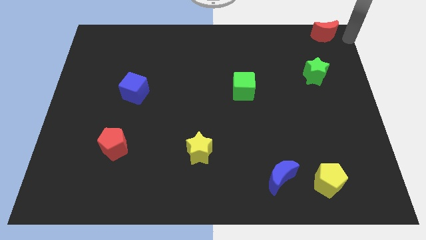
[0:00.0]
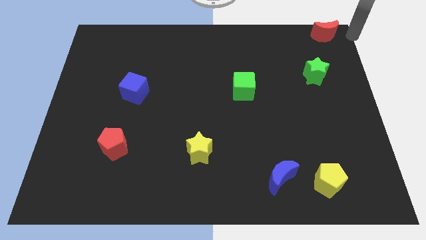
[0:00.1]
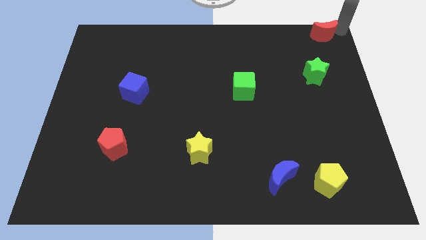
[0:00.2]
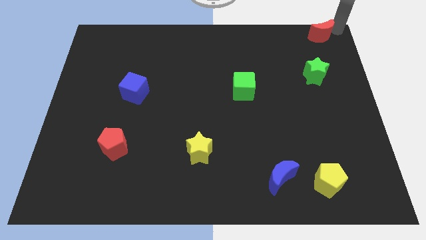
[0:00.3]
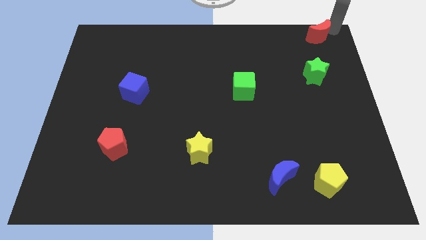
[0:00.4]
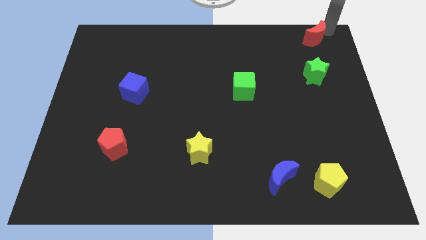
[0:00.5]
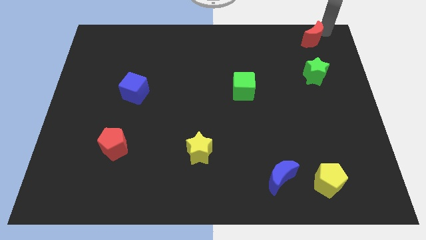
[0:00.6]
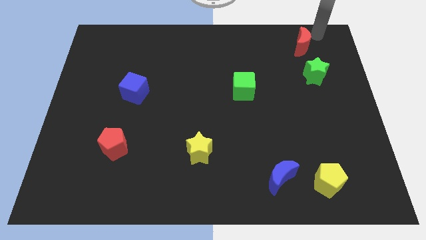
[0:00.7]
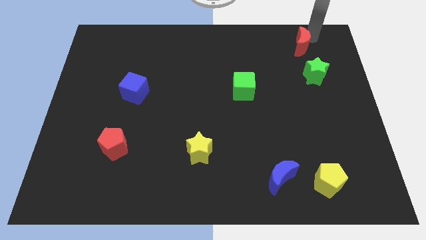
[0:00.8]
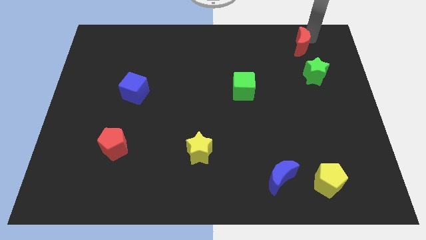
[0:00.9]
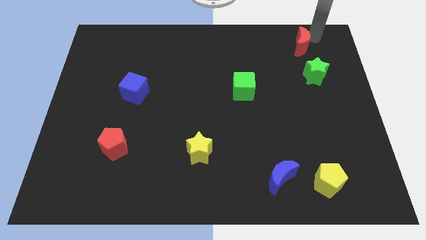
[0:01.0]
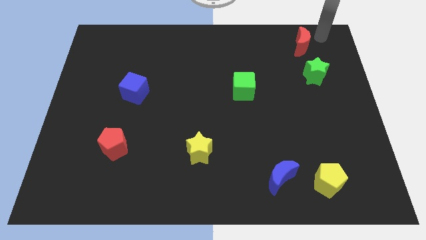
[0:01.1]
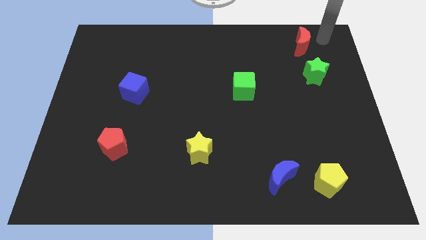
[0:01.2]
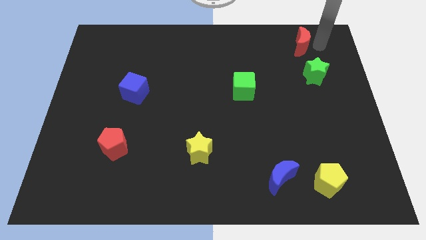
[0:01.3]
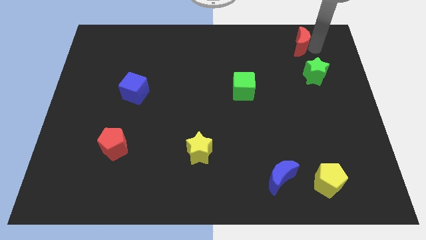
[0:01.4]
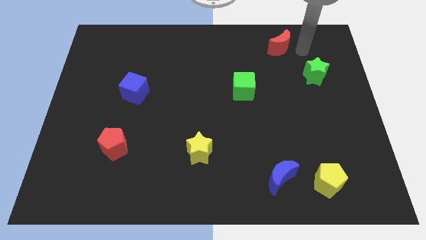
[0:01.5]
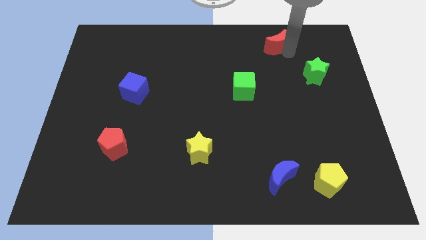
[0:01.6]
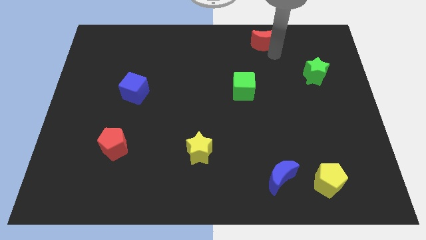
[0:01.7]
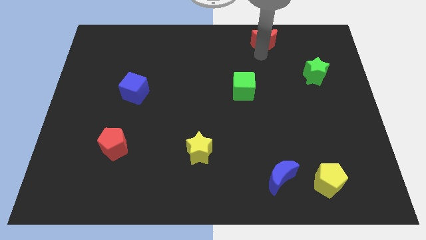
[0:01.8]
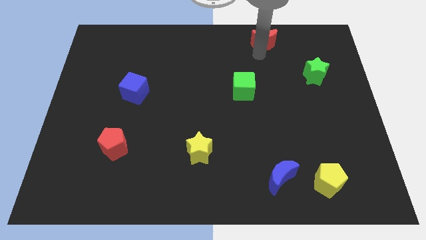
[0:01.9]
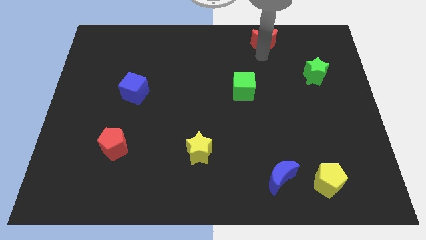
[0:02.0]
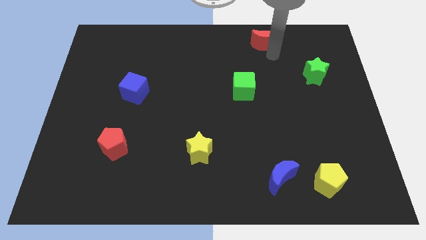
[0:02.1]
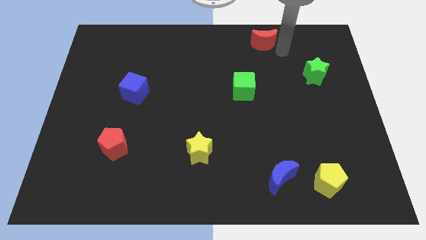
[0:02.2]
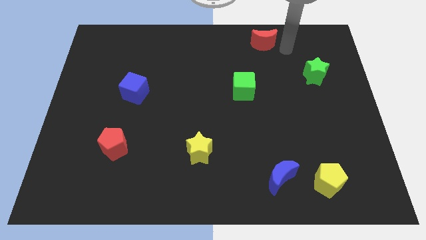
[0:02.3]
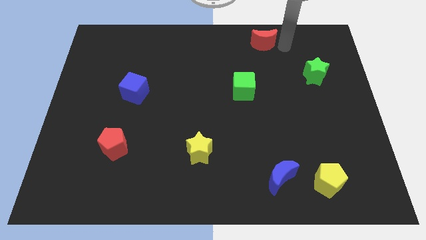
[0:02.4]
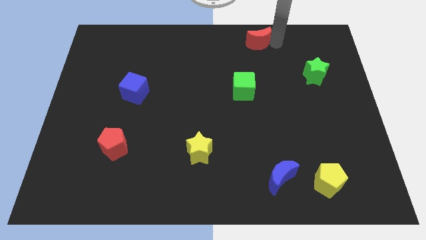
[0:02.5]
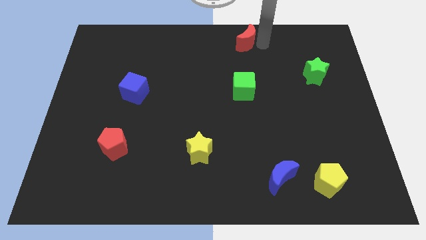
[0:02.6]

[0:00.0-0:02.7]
move the red moon to the vertical top side of the green cube

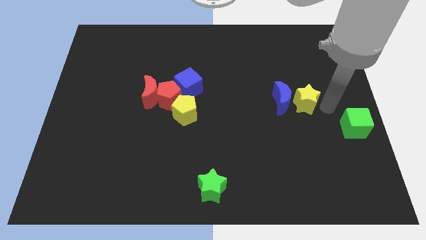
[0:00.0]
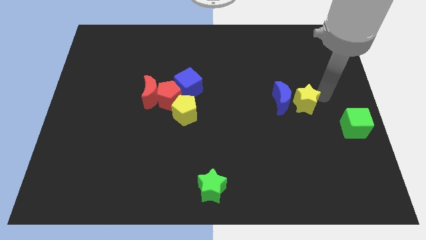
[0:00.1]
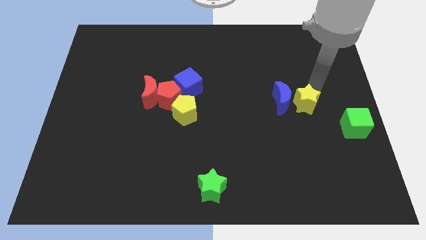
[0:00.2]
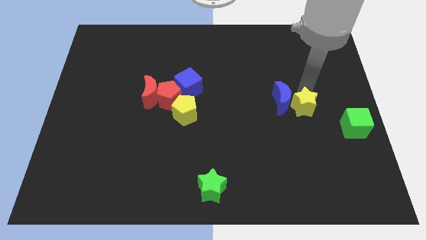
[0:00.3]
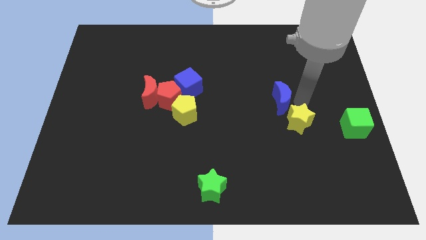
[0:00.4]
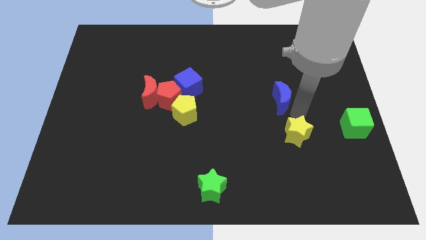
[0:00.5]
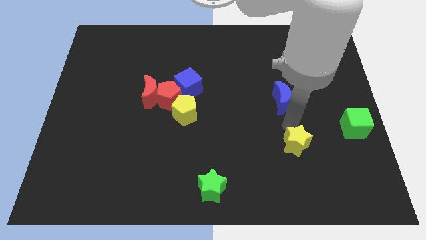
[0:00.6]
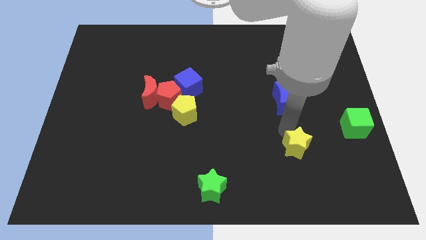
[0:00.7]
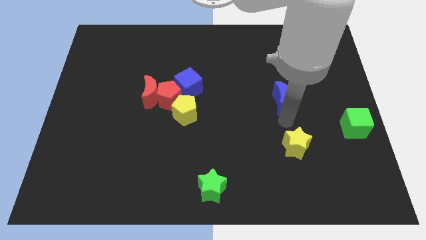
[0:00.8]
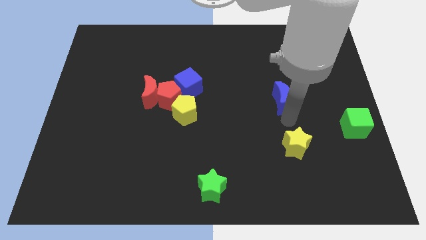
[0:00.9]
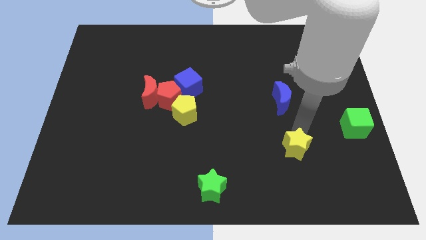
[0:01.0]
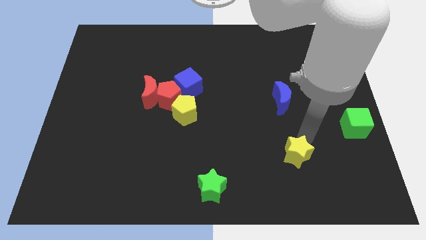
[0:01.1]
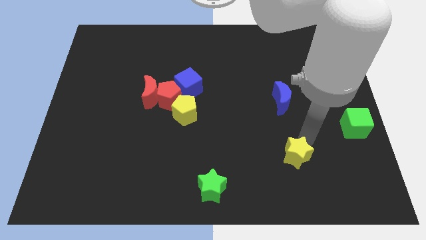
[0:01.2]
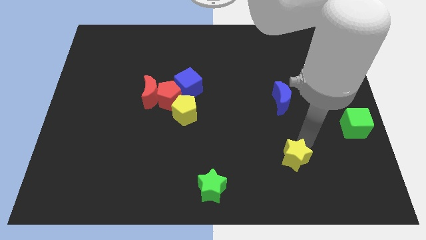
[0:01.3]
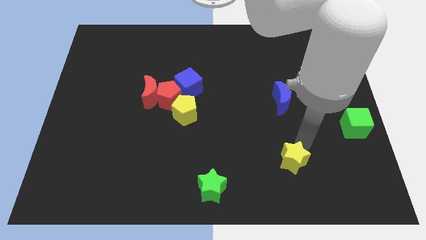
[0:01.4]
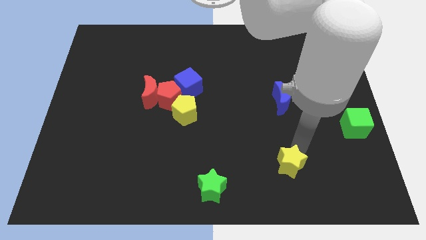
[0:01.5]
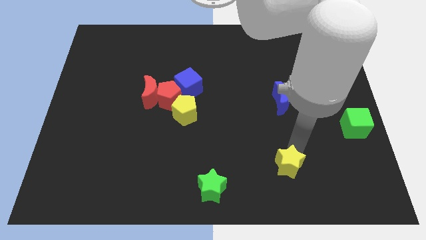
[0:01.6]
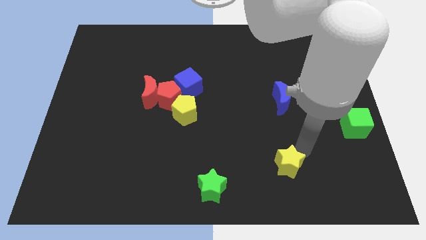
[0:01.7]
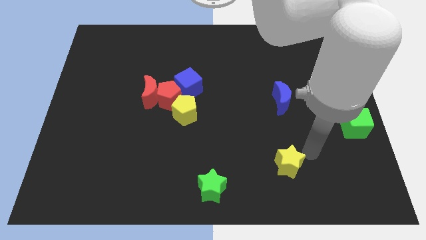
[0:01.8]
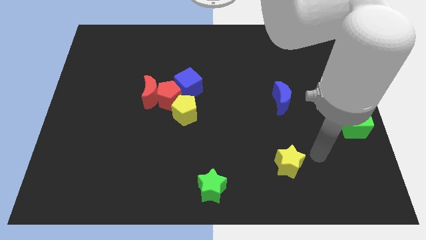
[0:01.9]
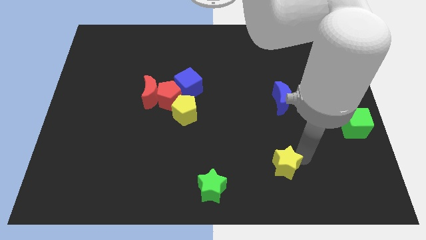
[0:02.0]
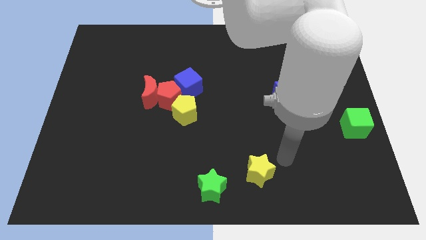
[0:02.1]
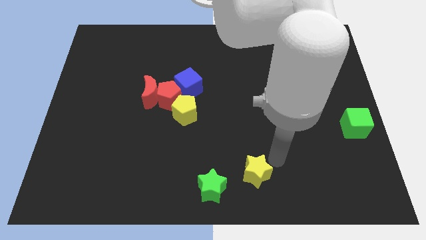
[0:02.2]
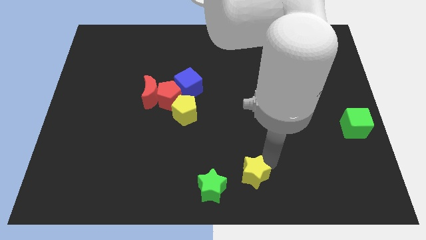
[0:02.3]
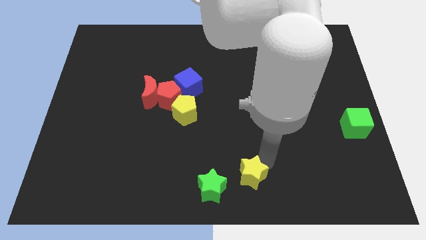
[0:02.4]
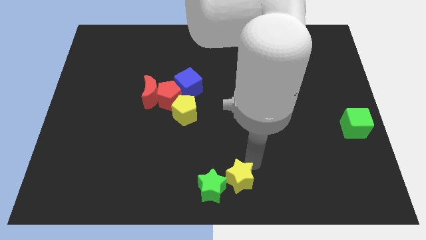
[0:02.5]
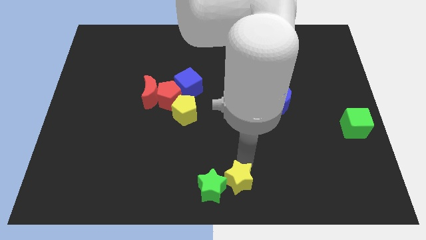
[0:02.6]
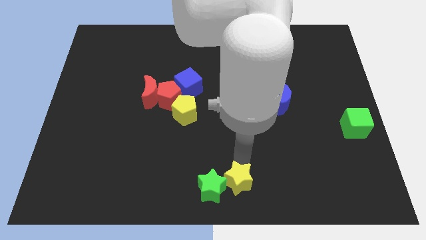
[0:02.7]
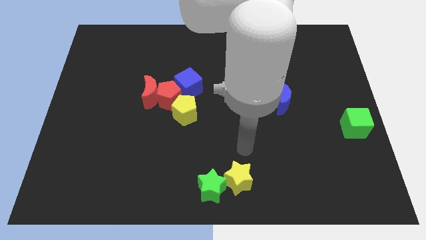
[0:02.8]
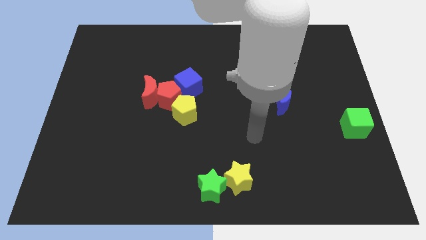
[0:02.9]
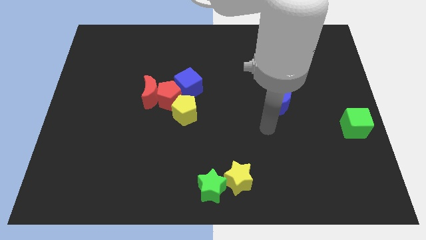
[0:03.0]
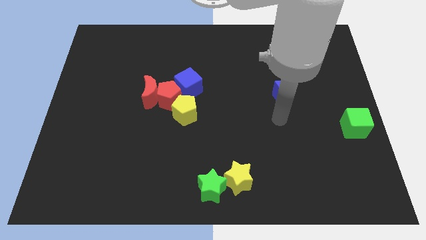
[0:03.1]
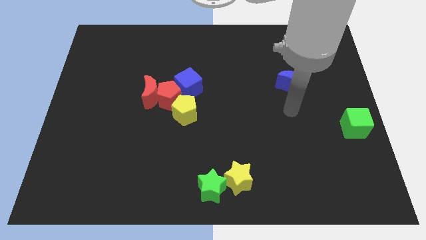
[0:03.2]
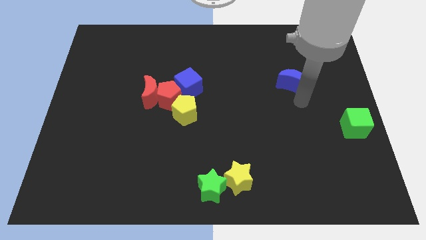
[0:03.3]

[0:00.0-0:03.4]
push the yellow star into the green star

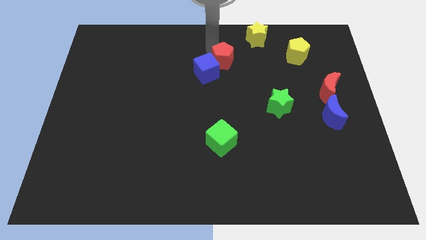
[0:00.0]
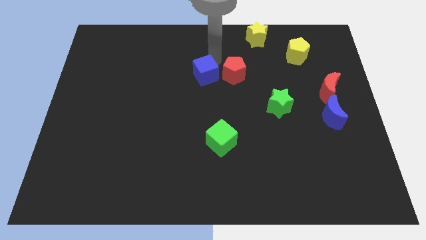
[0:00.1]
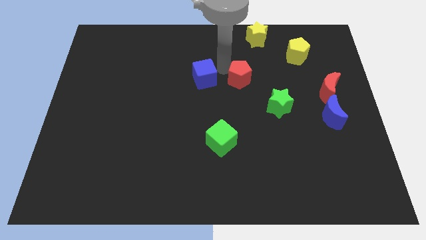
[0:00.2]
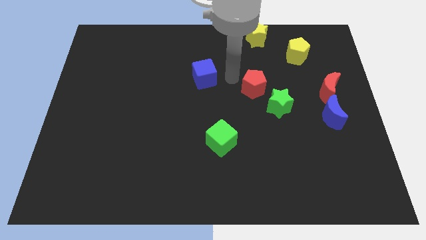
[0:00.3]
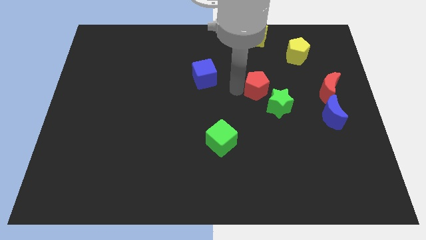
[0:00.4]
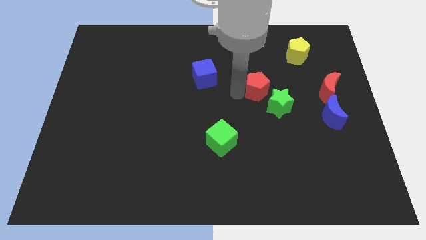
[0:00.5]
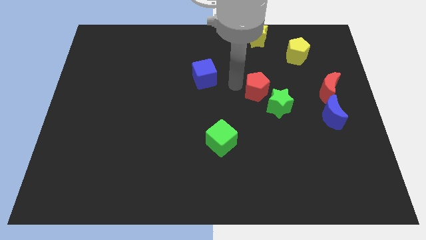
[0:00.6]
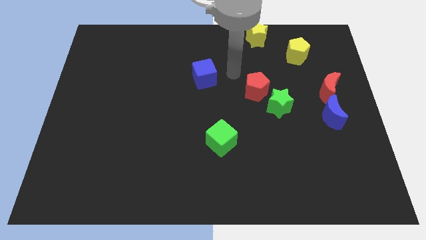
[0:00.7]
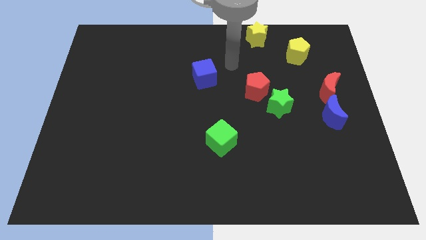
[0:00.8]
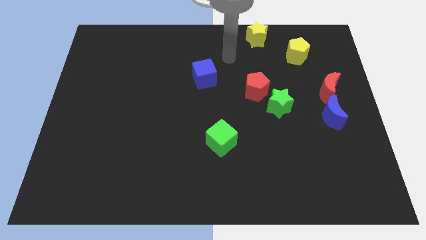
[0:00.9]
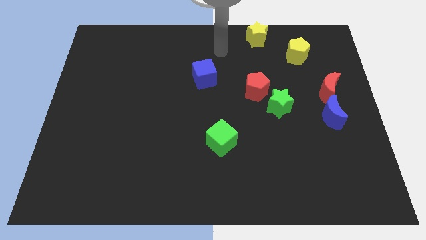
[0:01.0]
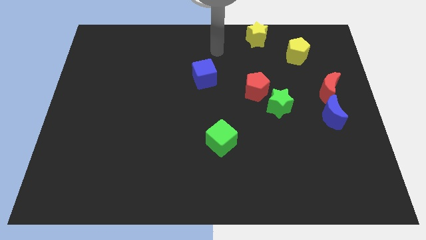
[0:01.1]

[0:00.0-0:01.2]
move the red pentagon away from the blue cube

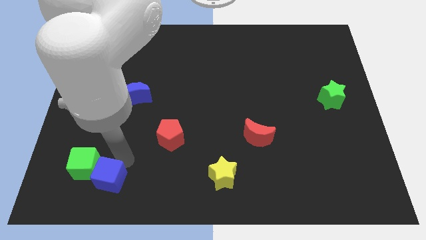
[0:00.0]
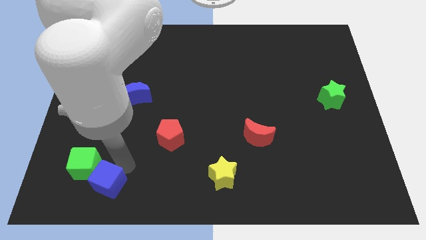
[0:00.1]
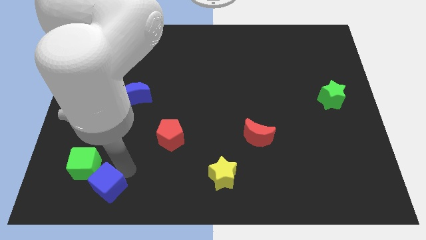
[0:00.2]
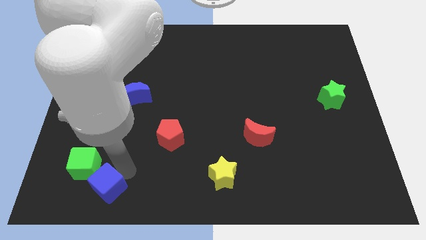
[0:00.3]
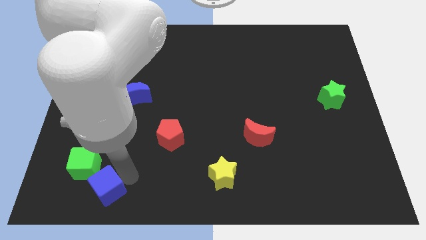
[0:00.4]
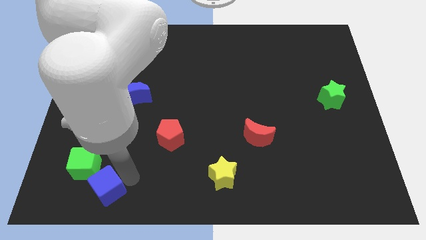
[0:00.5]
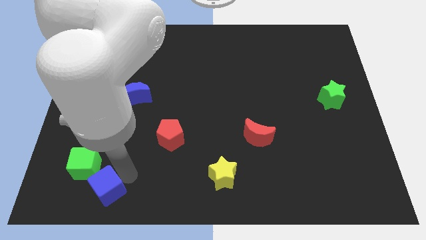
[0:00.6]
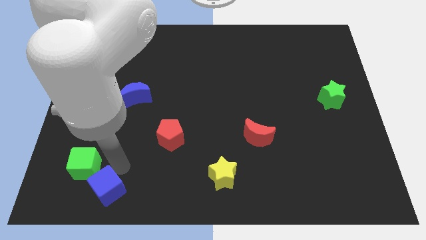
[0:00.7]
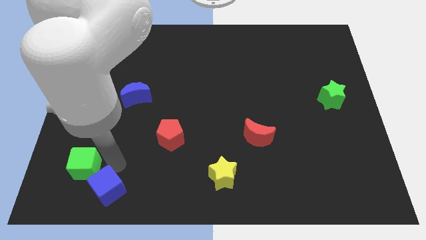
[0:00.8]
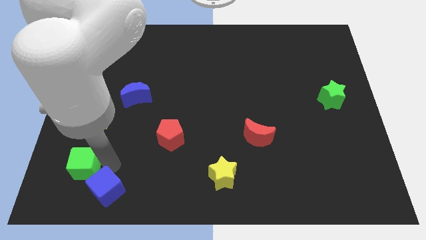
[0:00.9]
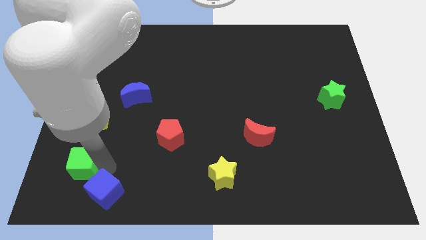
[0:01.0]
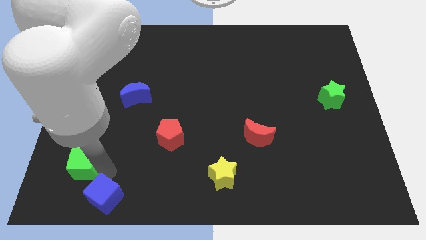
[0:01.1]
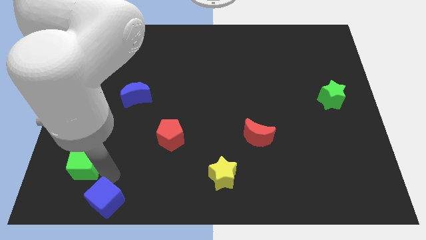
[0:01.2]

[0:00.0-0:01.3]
push the blue cube towards the bottom right of the green cube

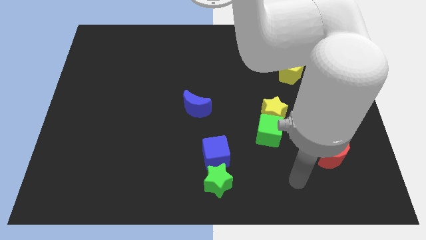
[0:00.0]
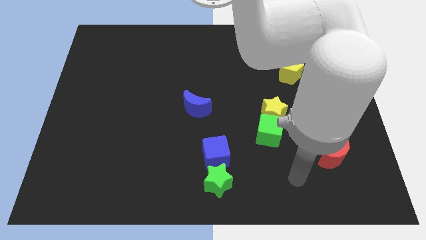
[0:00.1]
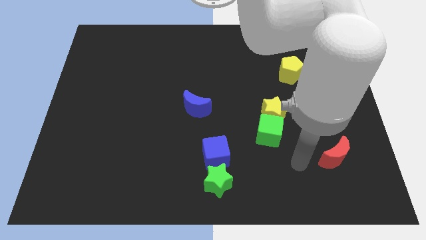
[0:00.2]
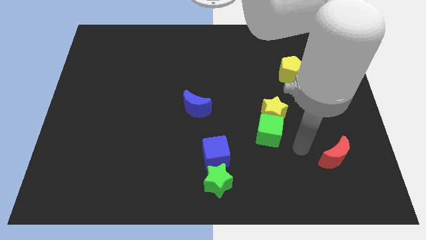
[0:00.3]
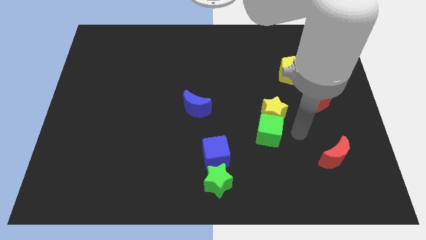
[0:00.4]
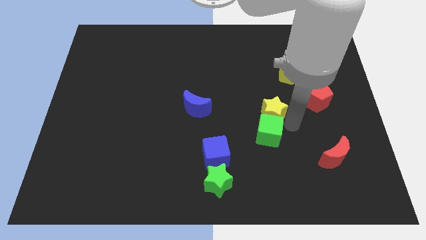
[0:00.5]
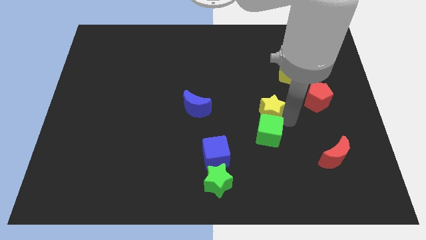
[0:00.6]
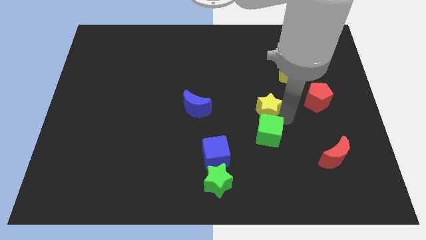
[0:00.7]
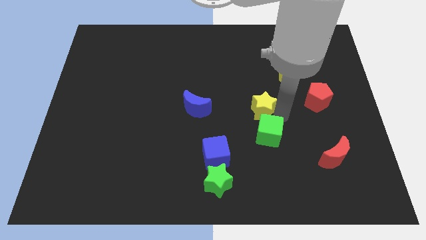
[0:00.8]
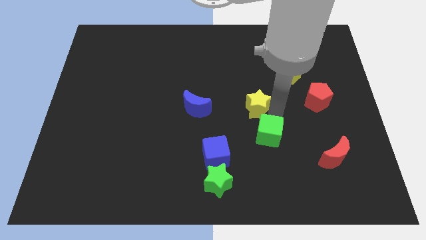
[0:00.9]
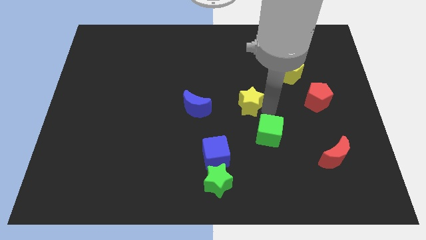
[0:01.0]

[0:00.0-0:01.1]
separate the yellow star from the green cube
